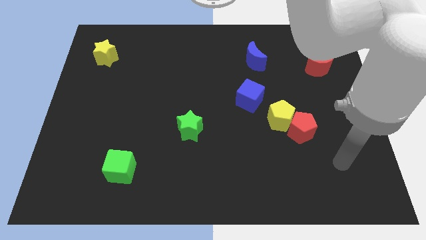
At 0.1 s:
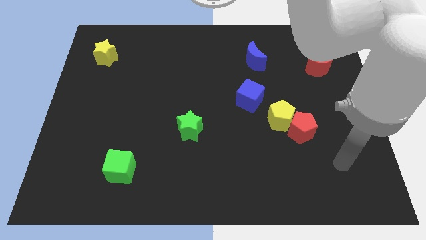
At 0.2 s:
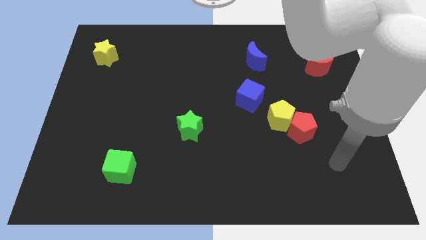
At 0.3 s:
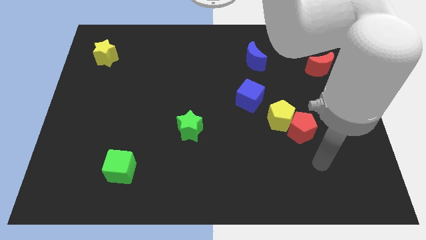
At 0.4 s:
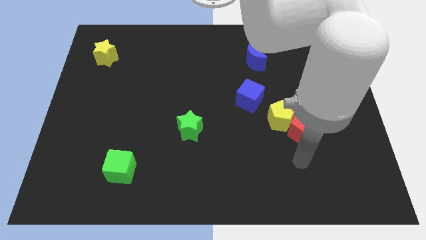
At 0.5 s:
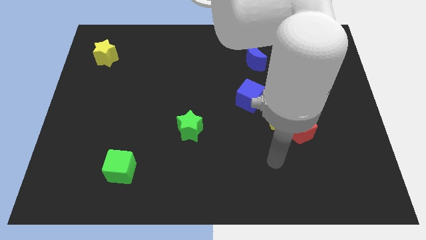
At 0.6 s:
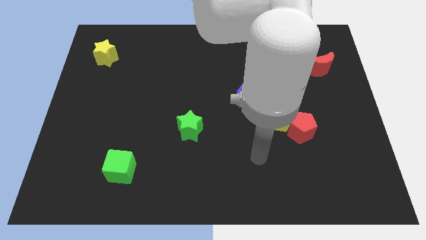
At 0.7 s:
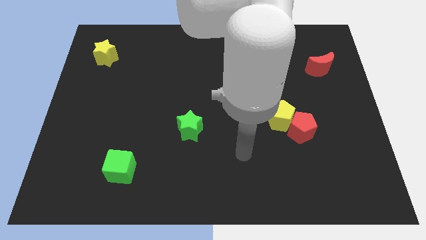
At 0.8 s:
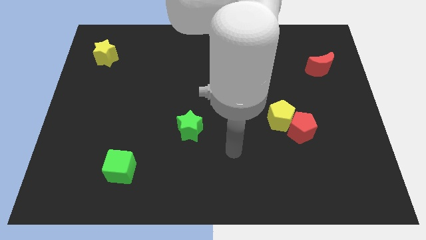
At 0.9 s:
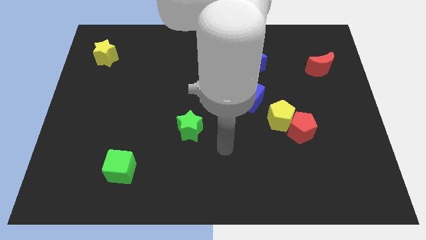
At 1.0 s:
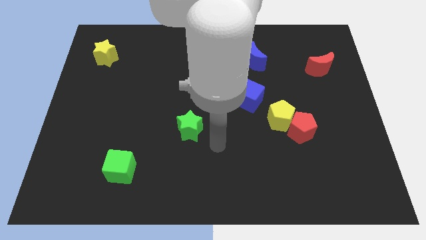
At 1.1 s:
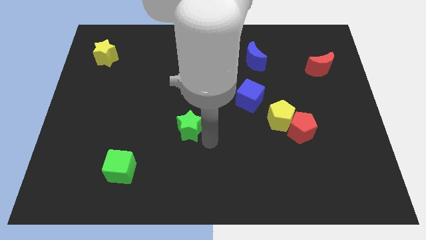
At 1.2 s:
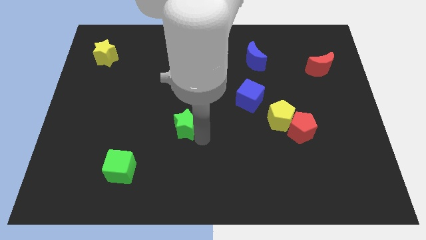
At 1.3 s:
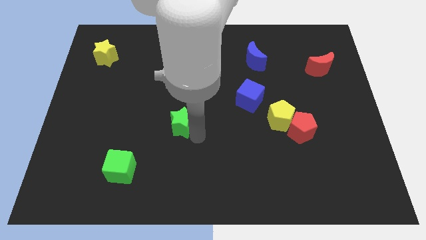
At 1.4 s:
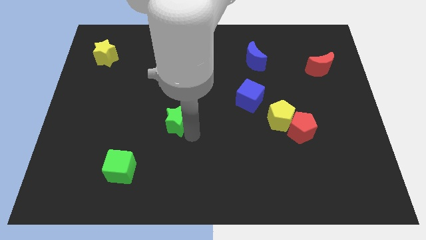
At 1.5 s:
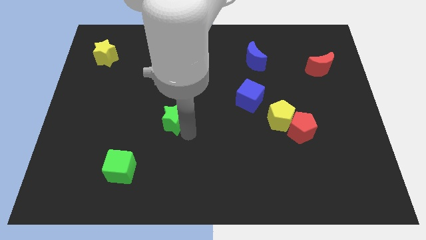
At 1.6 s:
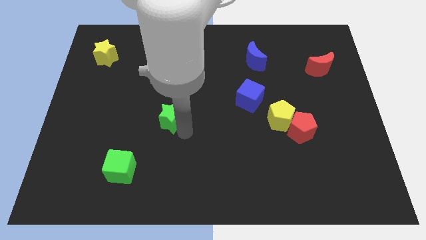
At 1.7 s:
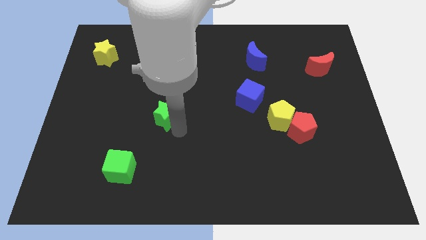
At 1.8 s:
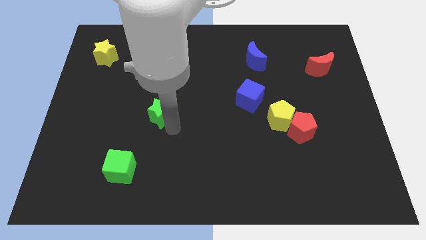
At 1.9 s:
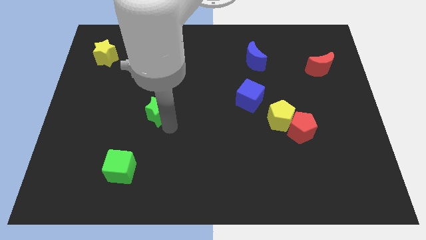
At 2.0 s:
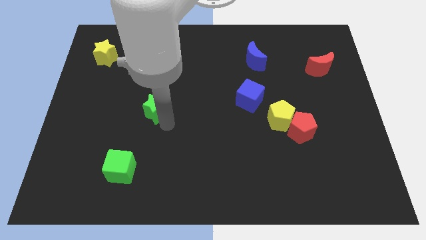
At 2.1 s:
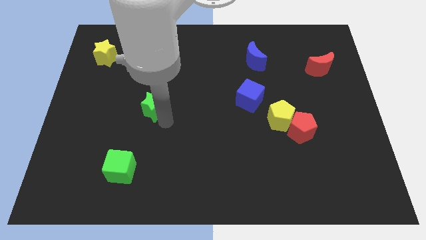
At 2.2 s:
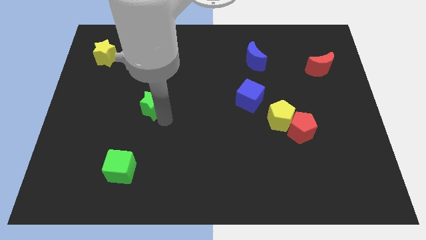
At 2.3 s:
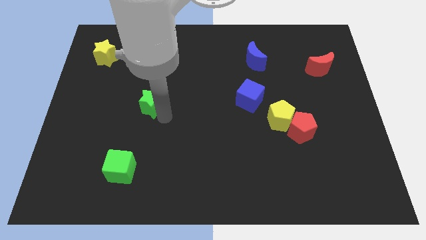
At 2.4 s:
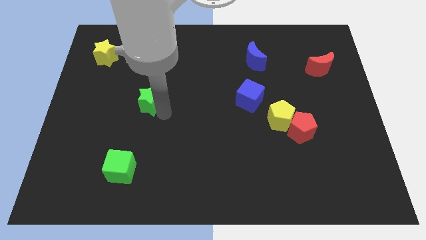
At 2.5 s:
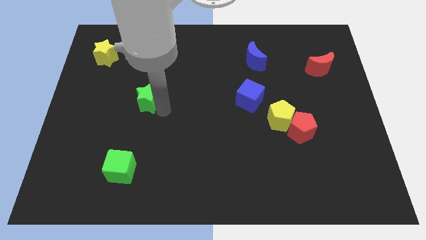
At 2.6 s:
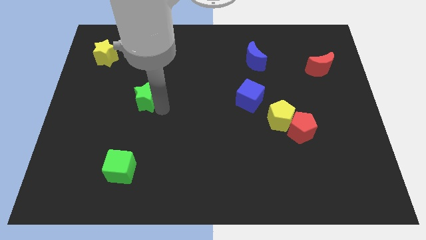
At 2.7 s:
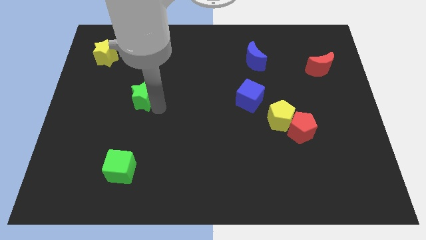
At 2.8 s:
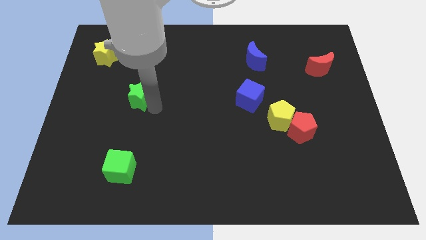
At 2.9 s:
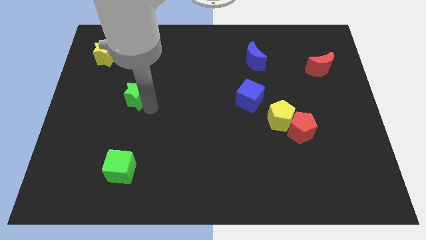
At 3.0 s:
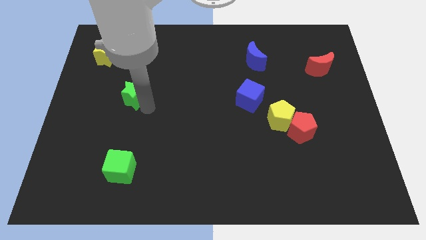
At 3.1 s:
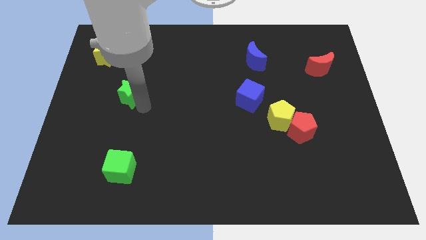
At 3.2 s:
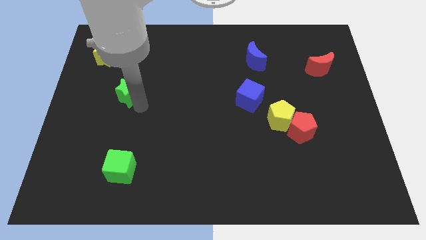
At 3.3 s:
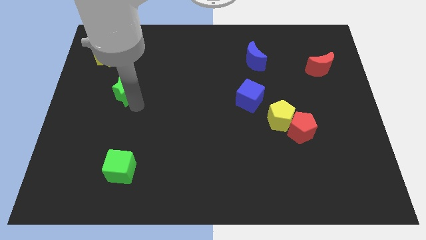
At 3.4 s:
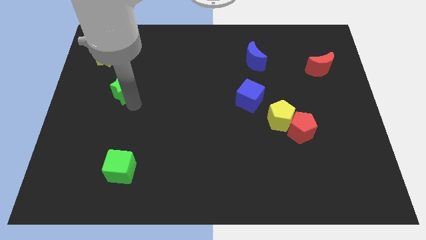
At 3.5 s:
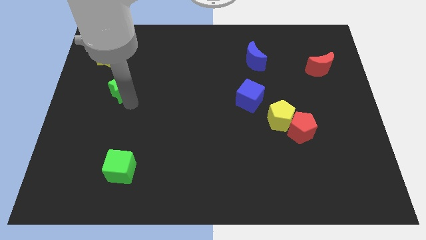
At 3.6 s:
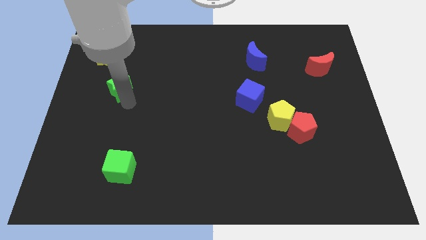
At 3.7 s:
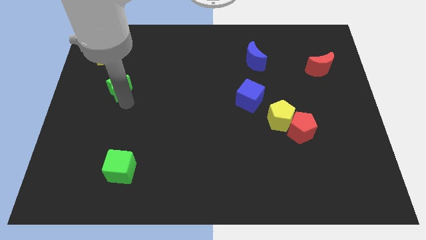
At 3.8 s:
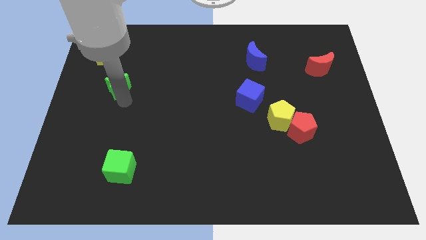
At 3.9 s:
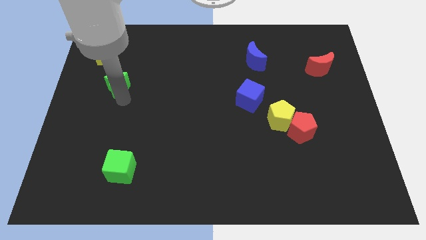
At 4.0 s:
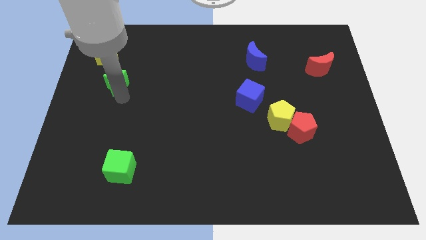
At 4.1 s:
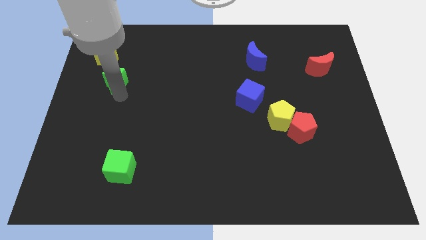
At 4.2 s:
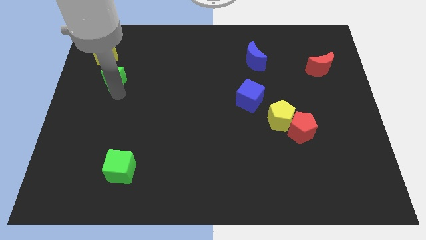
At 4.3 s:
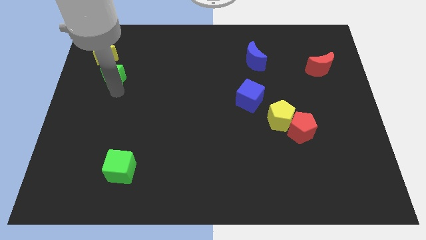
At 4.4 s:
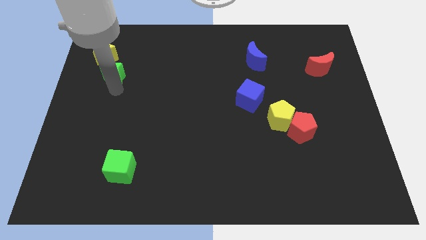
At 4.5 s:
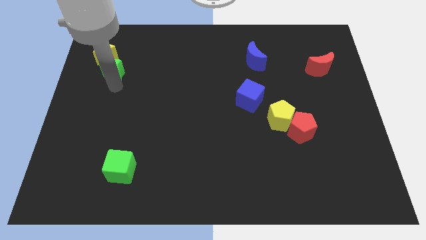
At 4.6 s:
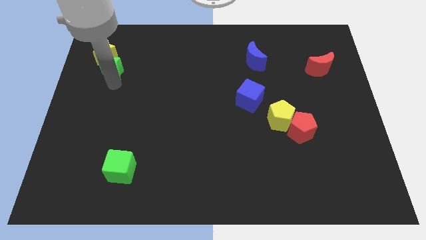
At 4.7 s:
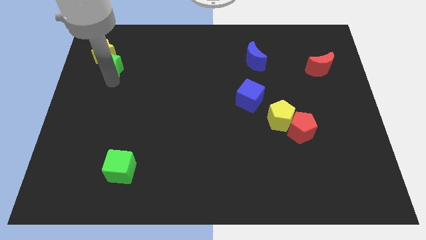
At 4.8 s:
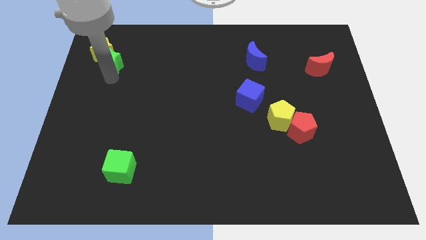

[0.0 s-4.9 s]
slide the green star towards the yellow star

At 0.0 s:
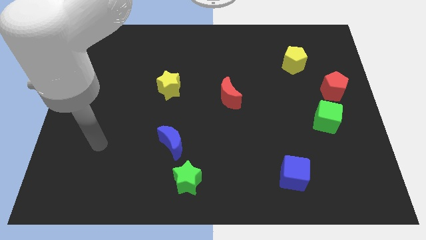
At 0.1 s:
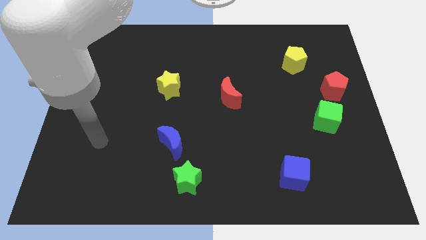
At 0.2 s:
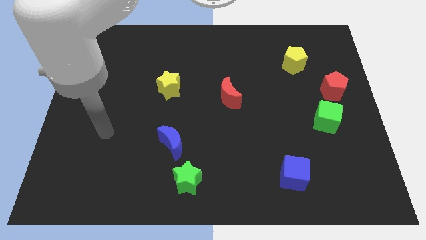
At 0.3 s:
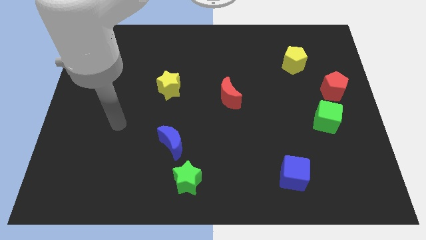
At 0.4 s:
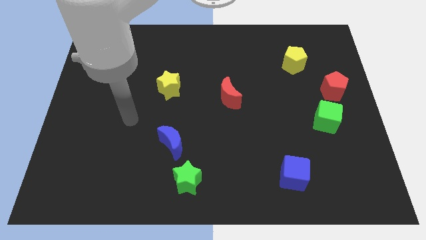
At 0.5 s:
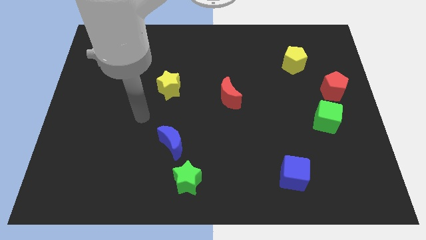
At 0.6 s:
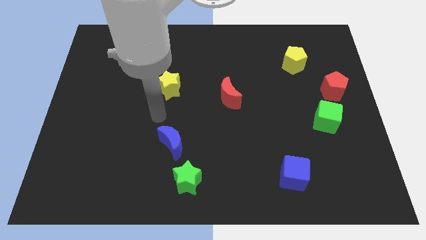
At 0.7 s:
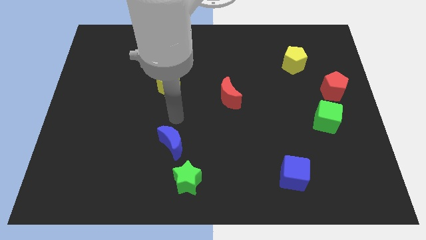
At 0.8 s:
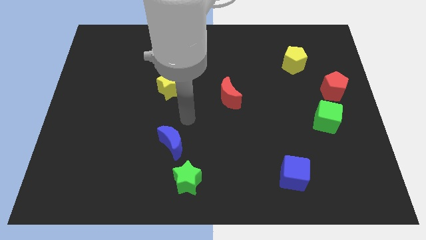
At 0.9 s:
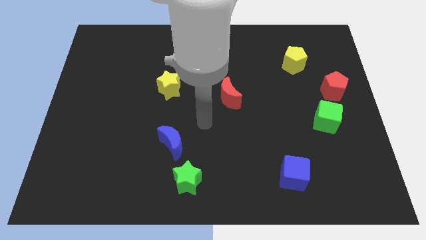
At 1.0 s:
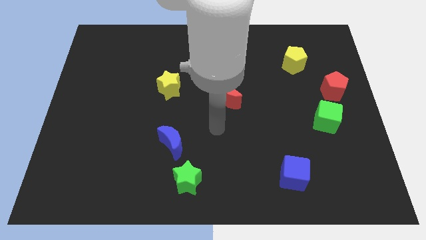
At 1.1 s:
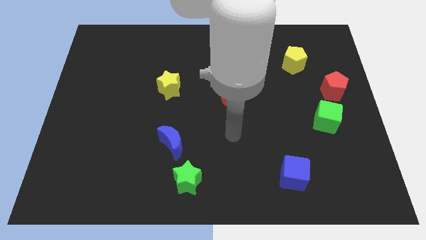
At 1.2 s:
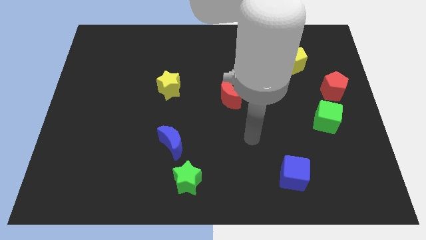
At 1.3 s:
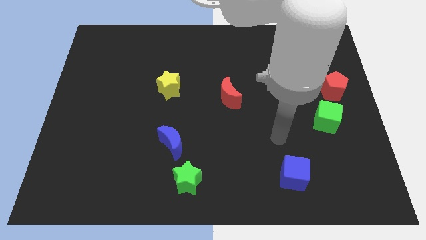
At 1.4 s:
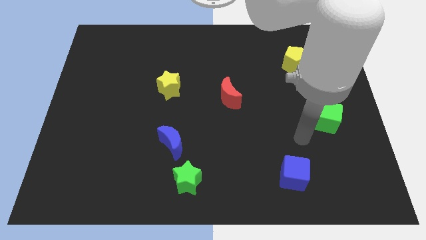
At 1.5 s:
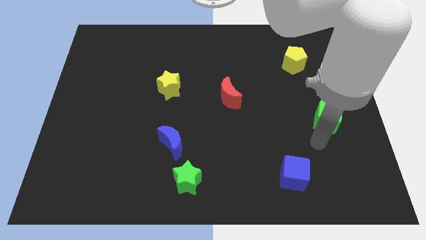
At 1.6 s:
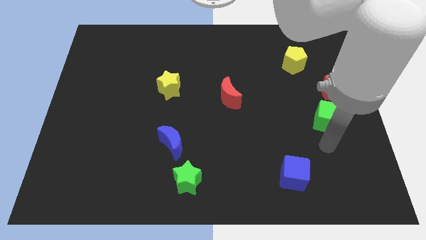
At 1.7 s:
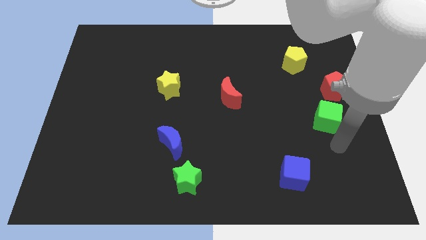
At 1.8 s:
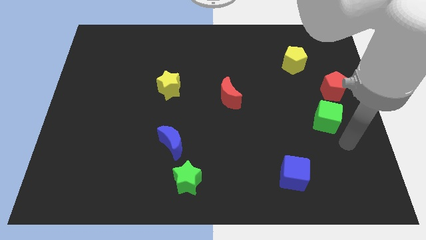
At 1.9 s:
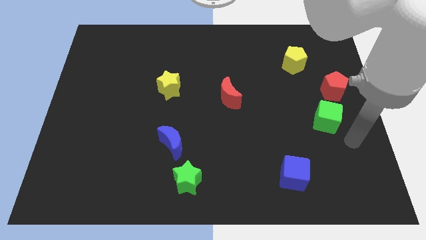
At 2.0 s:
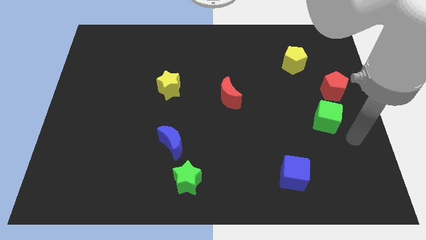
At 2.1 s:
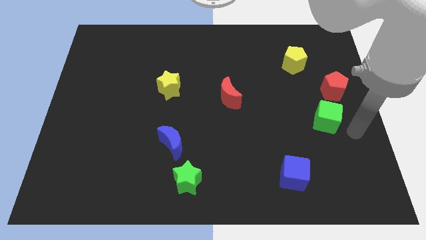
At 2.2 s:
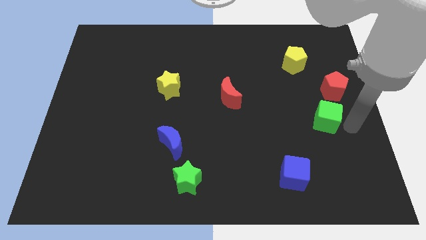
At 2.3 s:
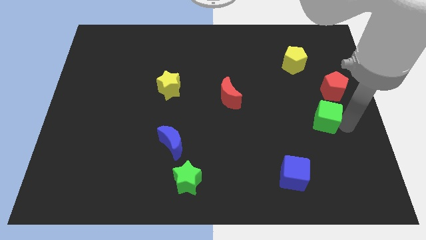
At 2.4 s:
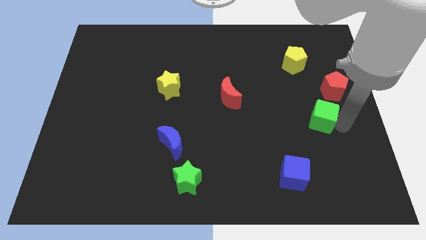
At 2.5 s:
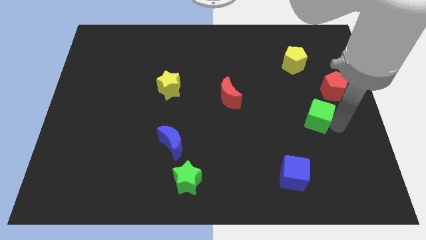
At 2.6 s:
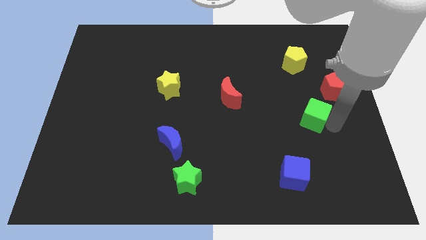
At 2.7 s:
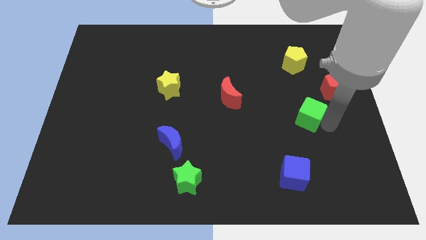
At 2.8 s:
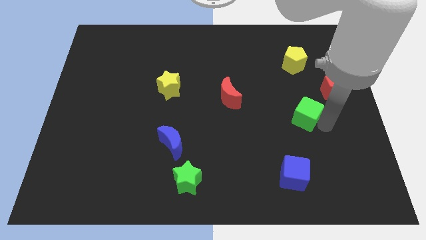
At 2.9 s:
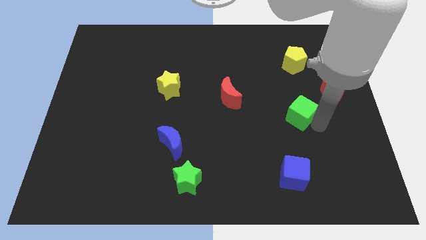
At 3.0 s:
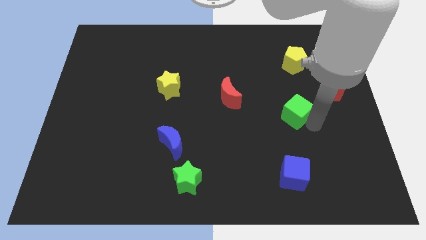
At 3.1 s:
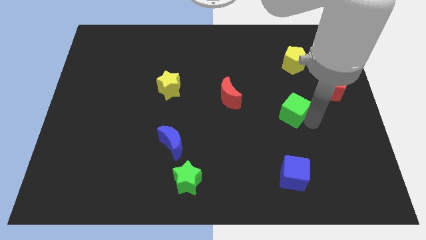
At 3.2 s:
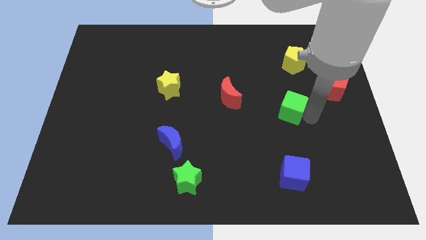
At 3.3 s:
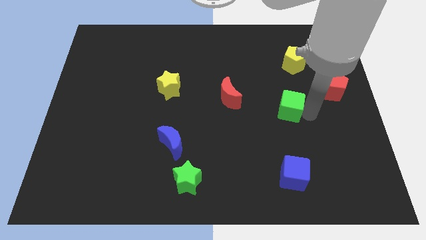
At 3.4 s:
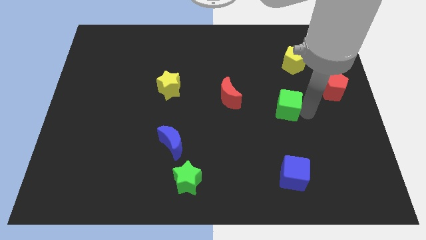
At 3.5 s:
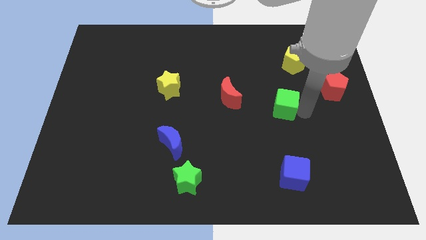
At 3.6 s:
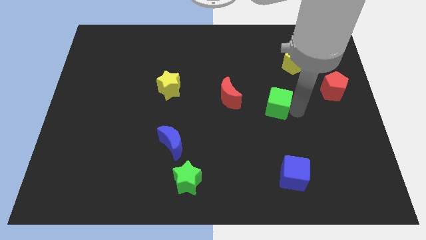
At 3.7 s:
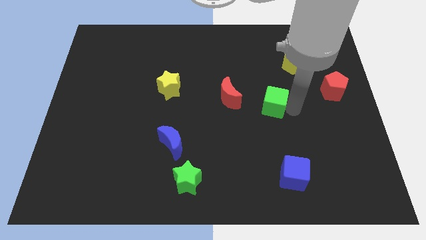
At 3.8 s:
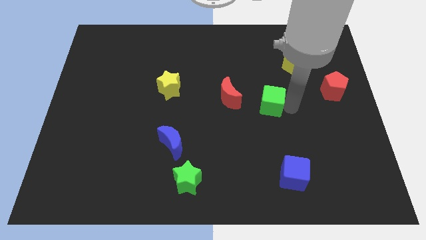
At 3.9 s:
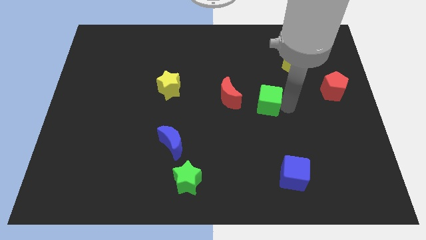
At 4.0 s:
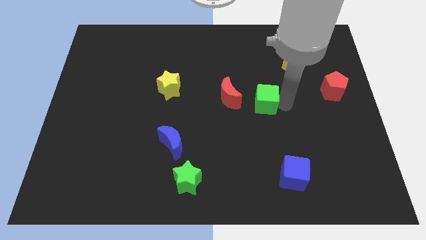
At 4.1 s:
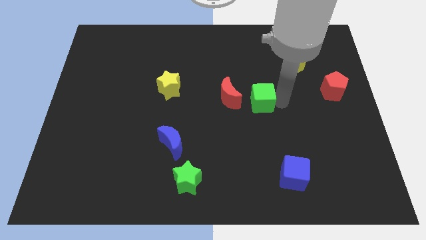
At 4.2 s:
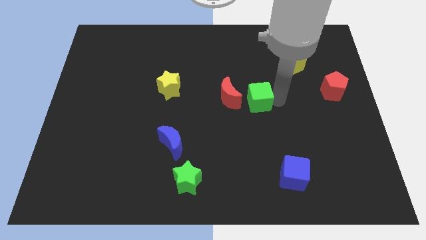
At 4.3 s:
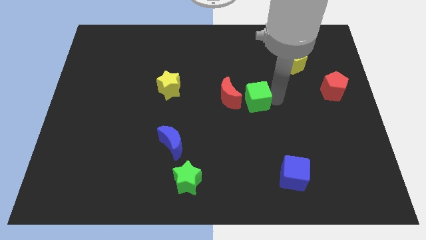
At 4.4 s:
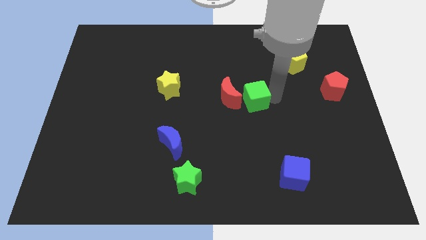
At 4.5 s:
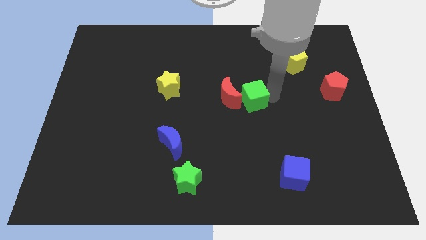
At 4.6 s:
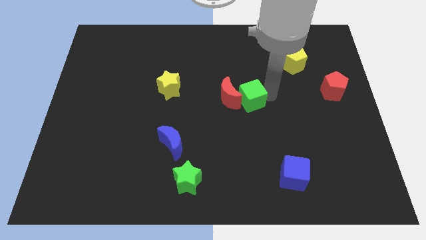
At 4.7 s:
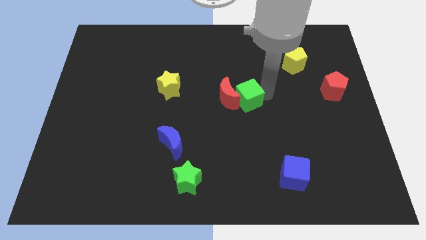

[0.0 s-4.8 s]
move the green cube to the red moon
